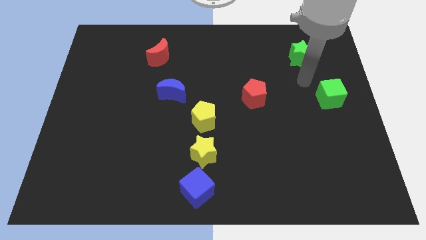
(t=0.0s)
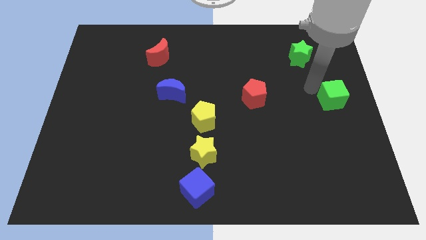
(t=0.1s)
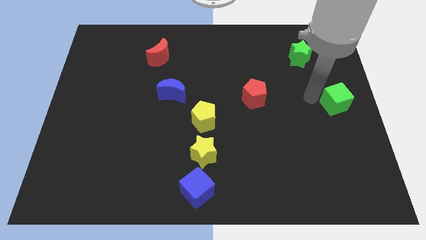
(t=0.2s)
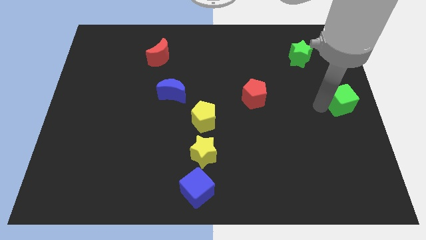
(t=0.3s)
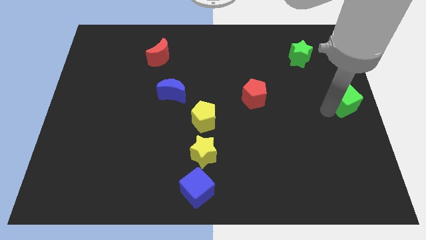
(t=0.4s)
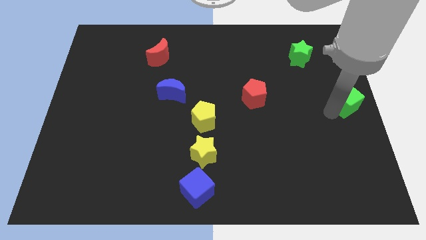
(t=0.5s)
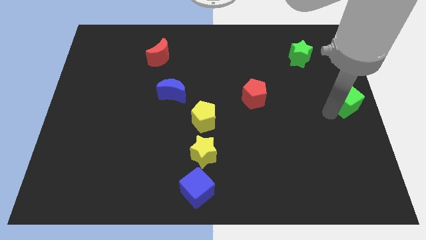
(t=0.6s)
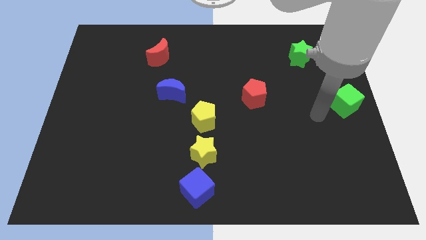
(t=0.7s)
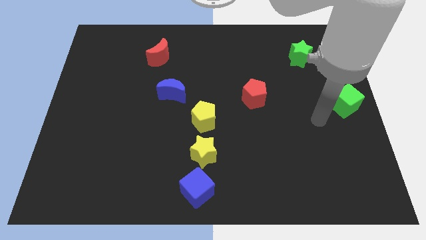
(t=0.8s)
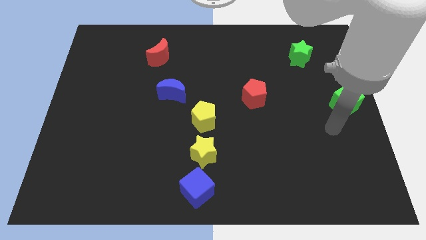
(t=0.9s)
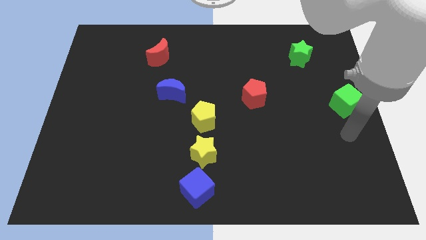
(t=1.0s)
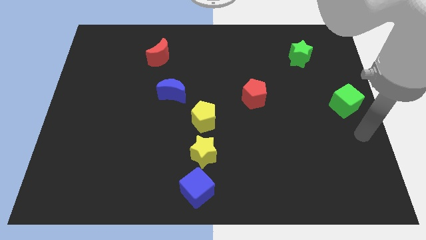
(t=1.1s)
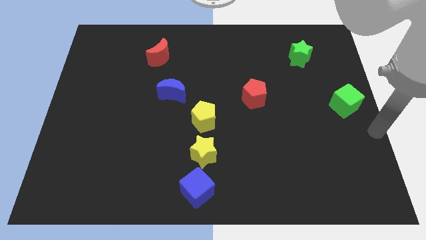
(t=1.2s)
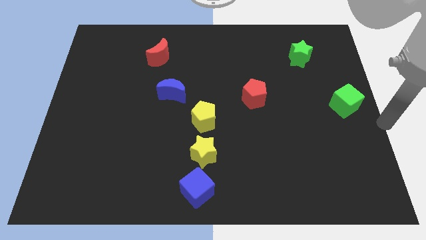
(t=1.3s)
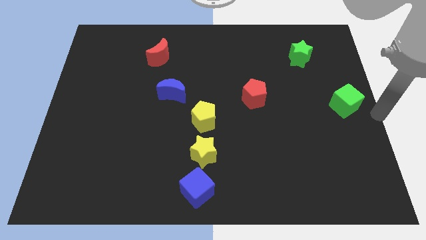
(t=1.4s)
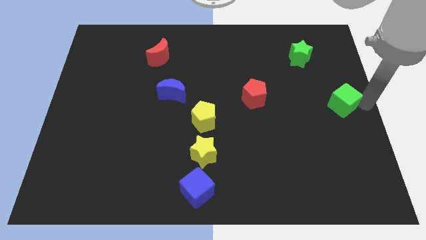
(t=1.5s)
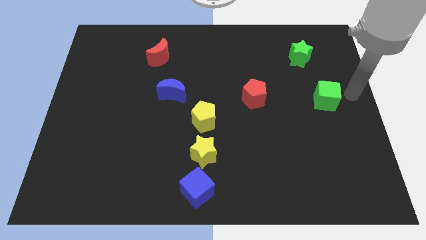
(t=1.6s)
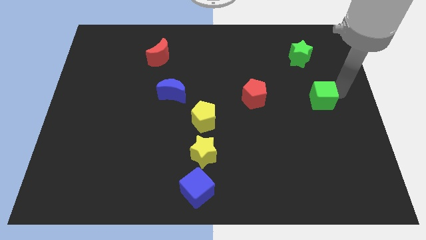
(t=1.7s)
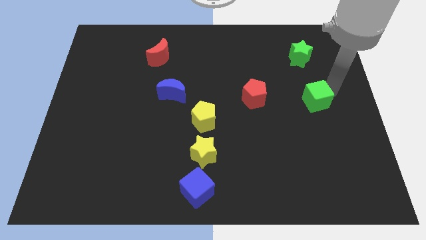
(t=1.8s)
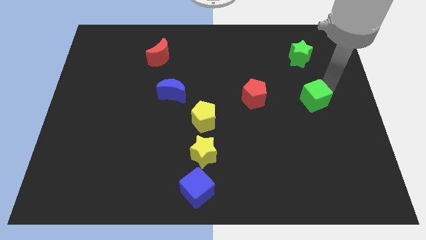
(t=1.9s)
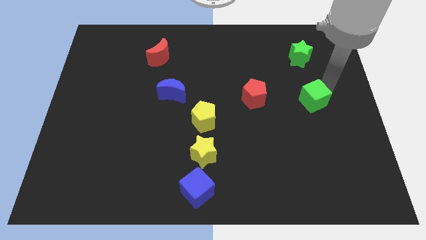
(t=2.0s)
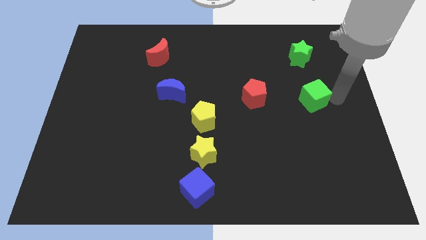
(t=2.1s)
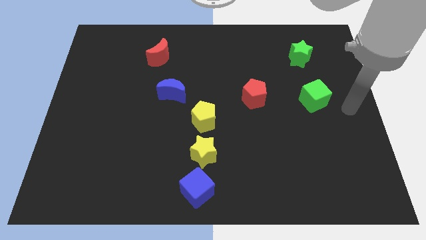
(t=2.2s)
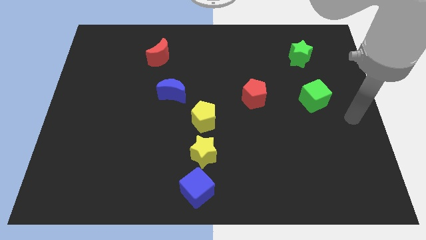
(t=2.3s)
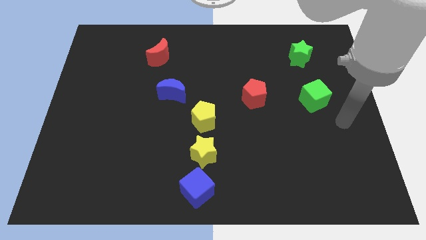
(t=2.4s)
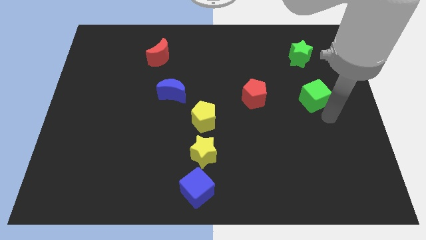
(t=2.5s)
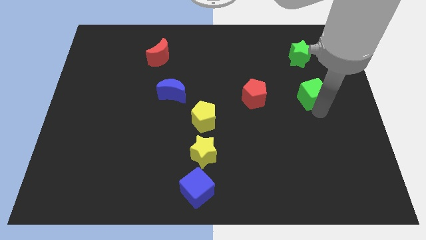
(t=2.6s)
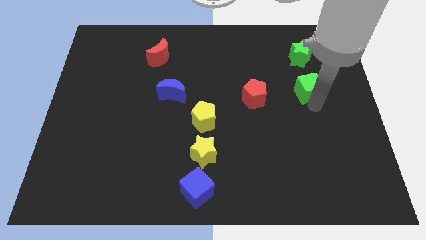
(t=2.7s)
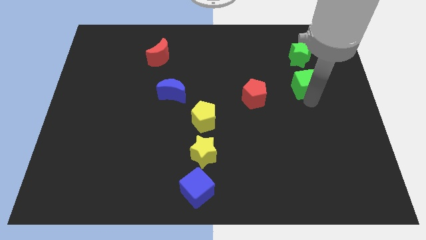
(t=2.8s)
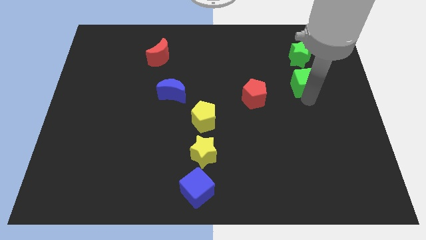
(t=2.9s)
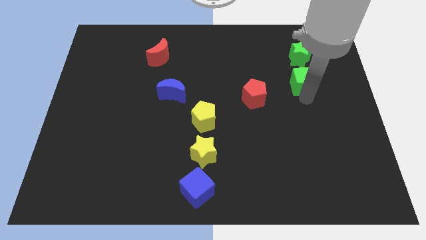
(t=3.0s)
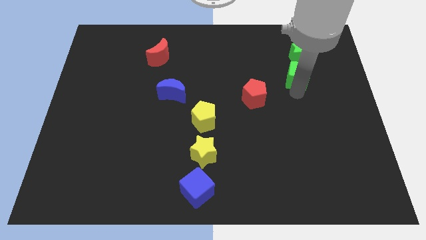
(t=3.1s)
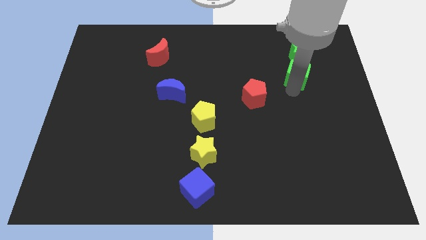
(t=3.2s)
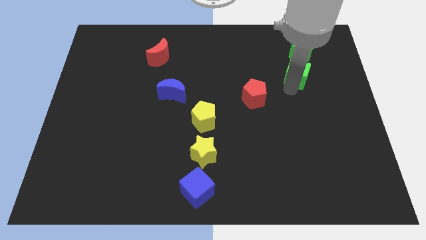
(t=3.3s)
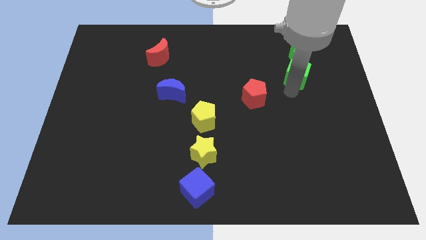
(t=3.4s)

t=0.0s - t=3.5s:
move the green cube close to the green star

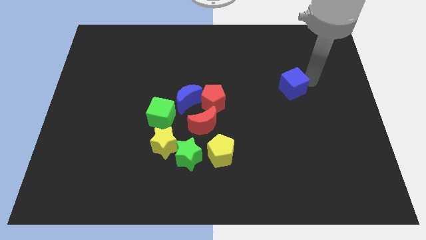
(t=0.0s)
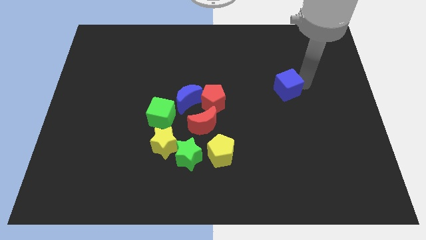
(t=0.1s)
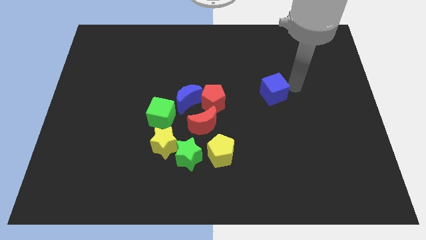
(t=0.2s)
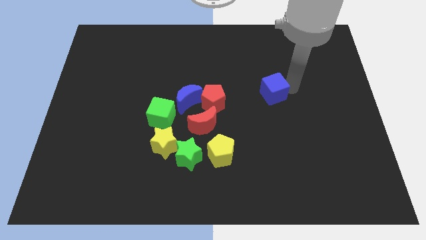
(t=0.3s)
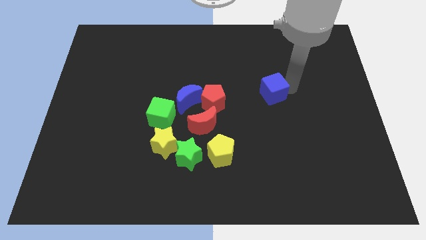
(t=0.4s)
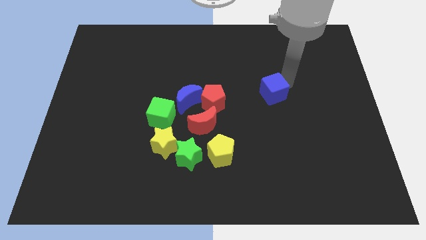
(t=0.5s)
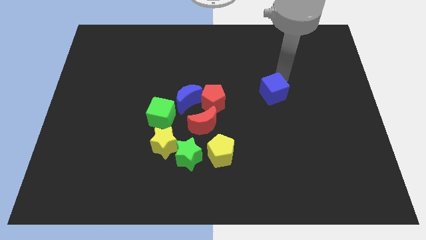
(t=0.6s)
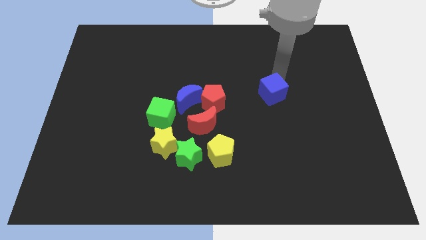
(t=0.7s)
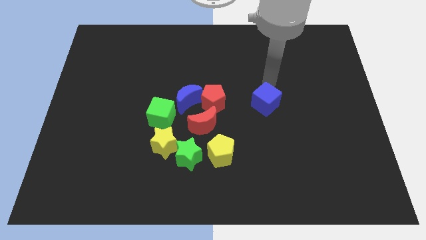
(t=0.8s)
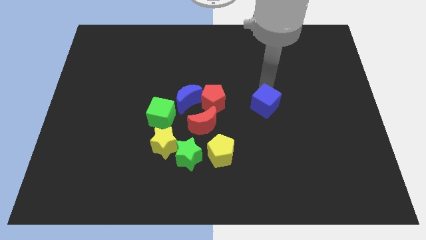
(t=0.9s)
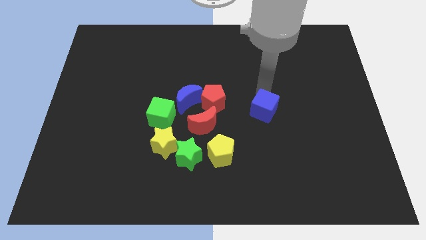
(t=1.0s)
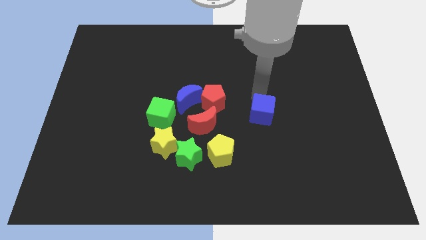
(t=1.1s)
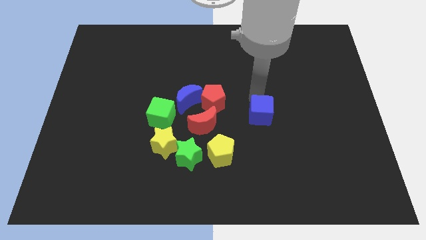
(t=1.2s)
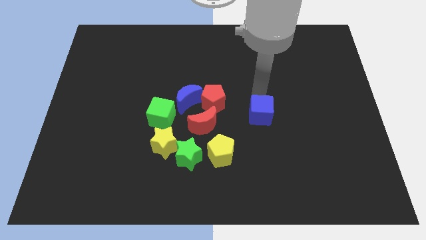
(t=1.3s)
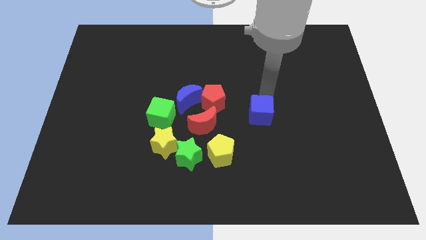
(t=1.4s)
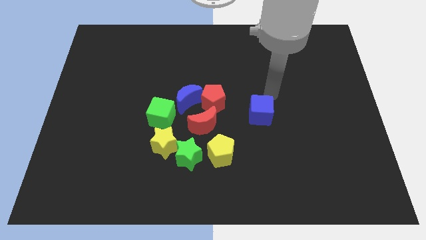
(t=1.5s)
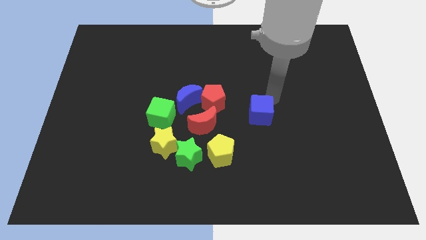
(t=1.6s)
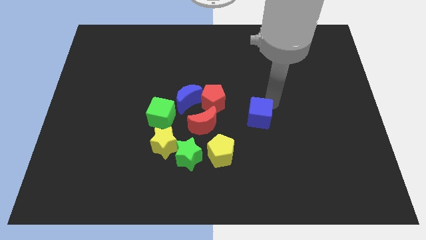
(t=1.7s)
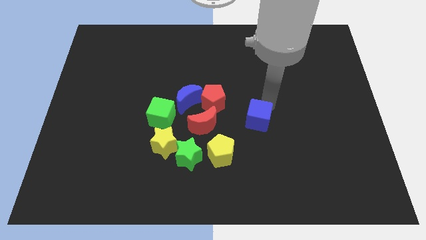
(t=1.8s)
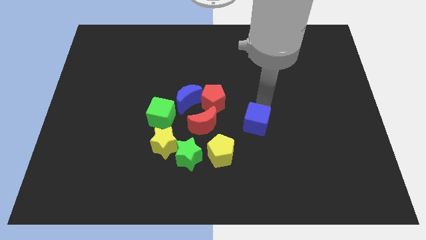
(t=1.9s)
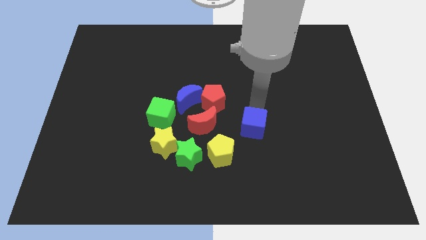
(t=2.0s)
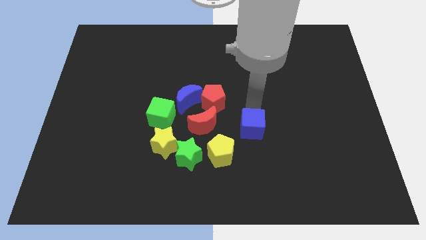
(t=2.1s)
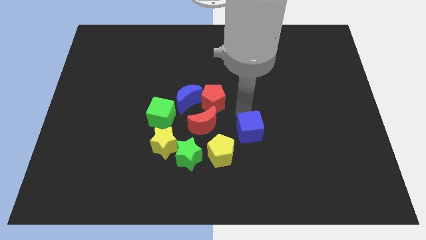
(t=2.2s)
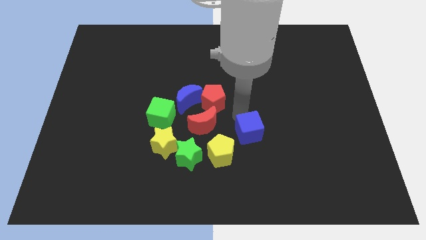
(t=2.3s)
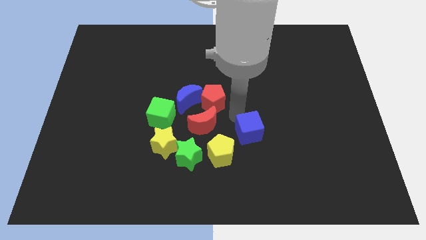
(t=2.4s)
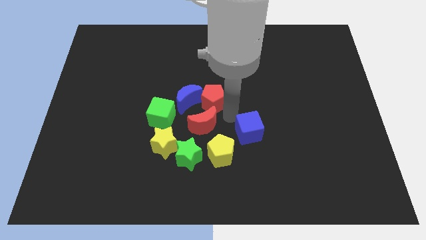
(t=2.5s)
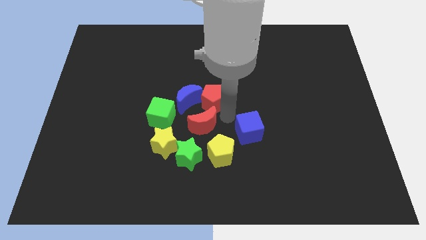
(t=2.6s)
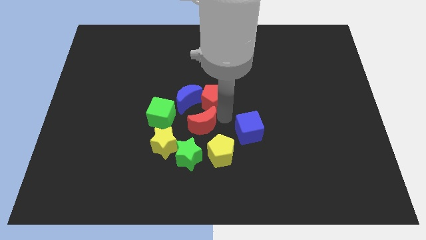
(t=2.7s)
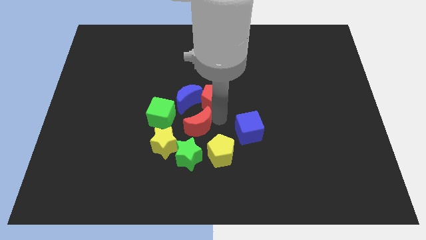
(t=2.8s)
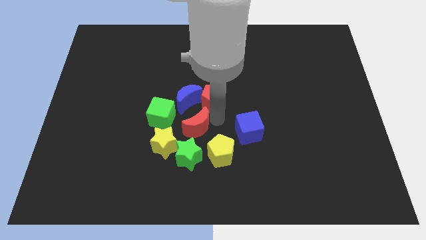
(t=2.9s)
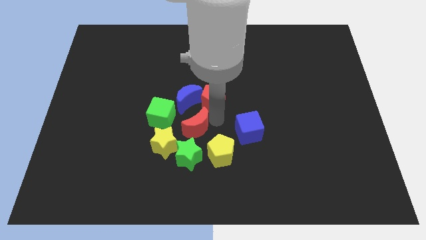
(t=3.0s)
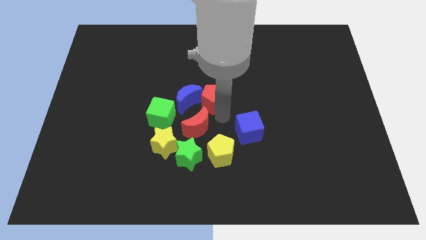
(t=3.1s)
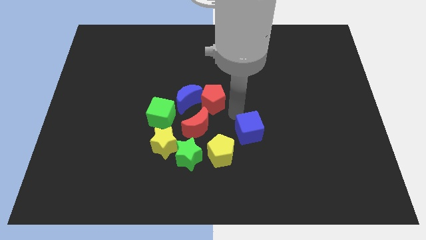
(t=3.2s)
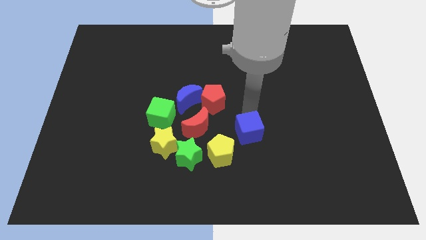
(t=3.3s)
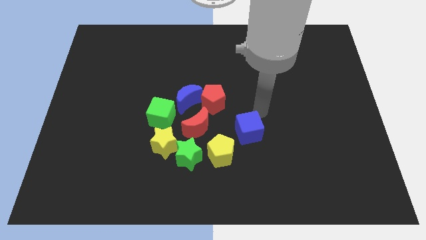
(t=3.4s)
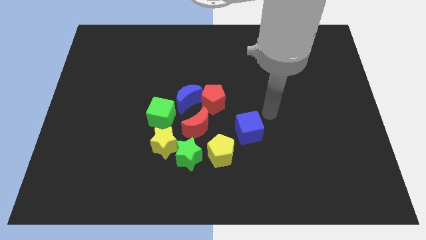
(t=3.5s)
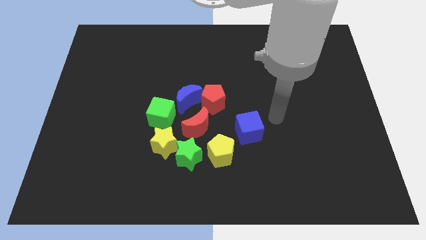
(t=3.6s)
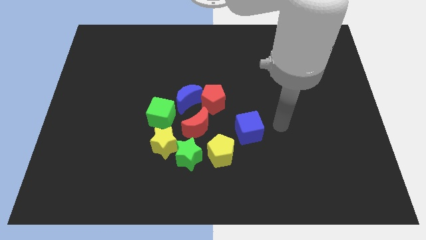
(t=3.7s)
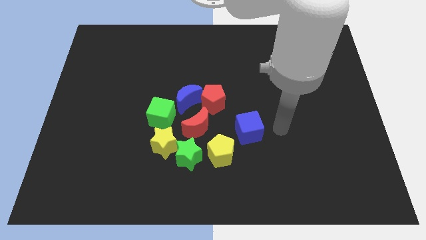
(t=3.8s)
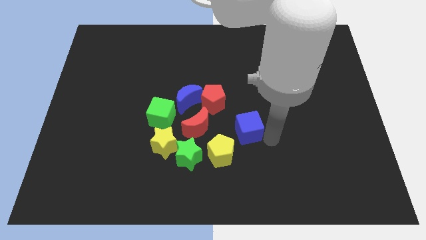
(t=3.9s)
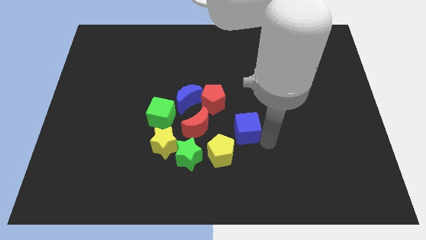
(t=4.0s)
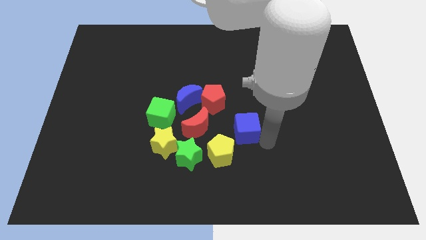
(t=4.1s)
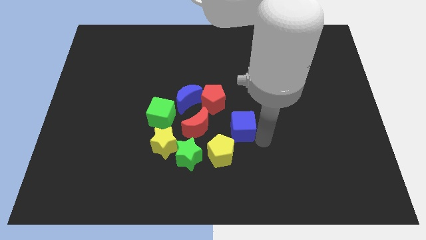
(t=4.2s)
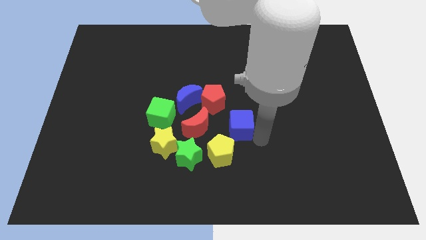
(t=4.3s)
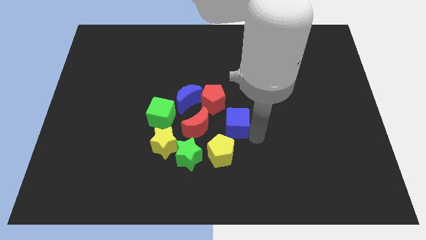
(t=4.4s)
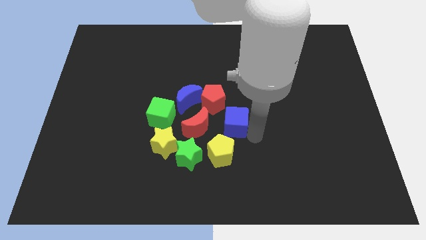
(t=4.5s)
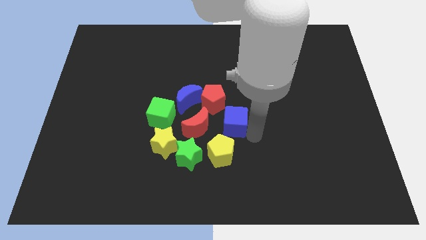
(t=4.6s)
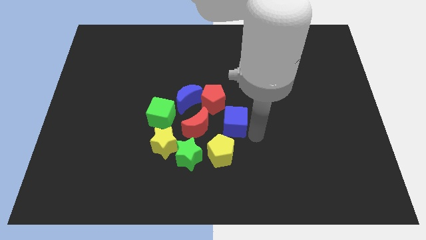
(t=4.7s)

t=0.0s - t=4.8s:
move the blue cube to the top right of the yellow pentagon

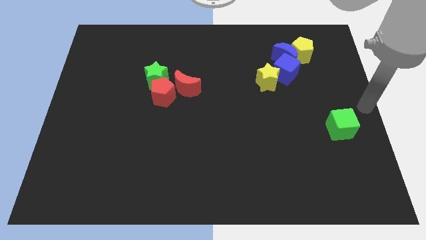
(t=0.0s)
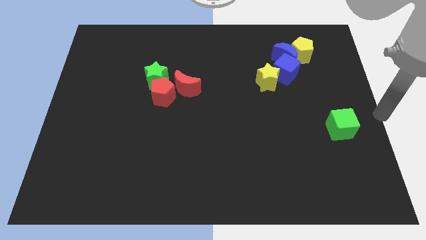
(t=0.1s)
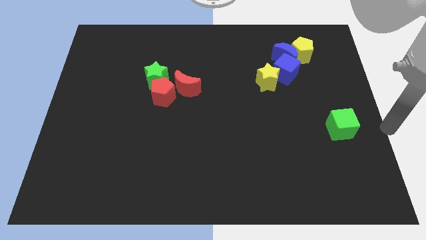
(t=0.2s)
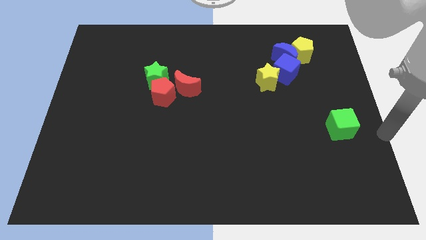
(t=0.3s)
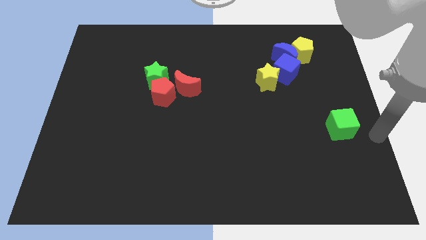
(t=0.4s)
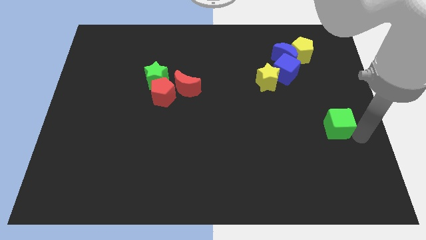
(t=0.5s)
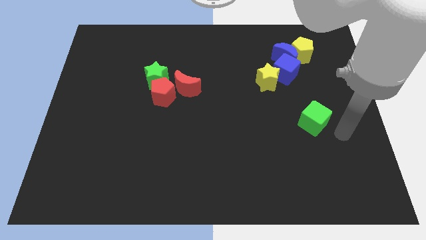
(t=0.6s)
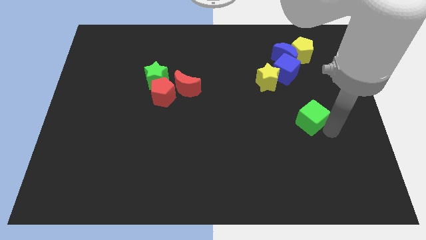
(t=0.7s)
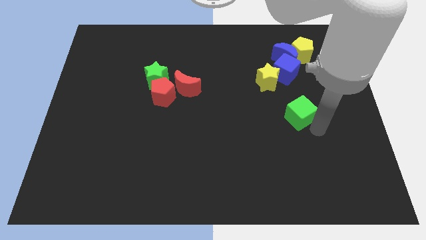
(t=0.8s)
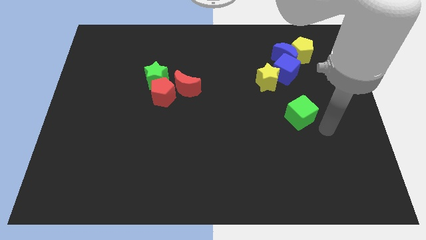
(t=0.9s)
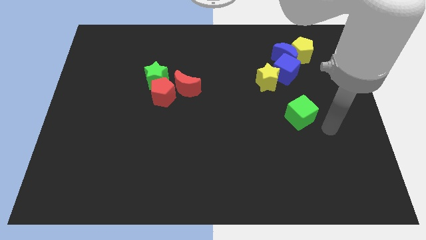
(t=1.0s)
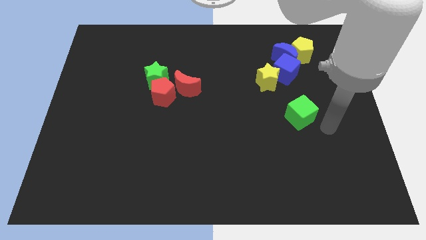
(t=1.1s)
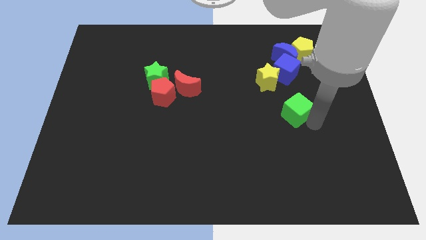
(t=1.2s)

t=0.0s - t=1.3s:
move the green cube to the top center of the board
